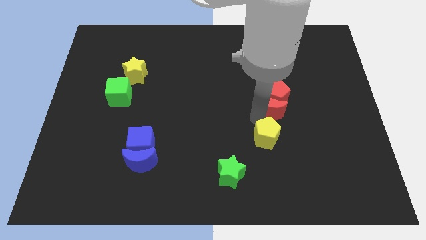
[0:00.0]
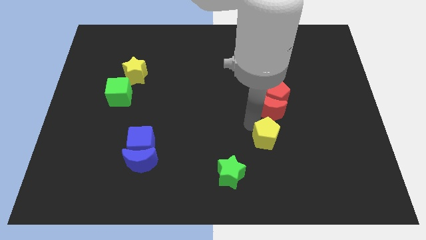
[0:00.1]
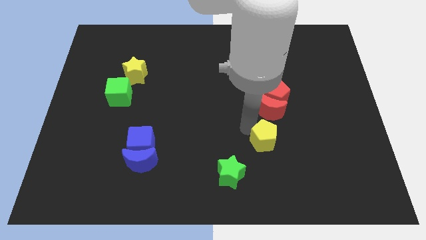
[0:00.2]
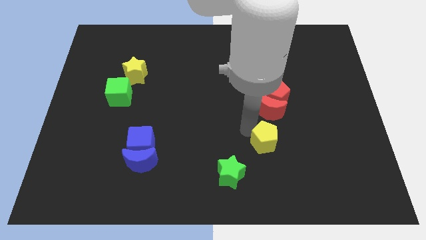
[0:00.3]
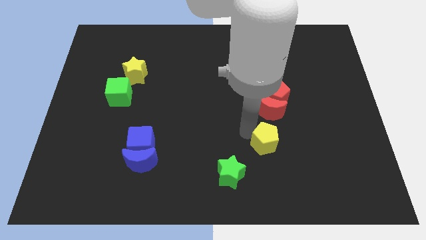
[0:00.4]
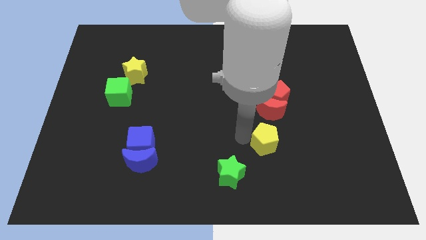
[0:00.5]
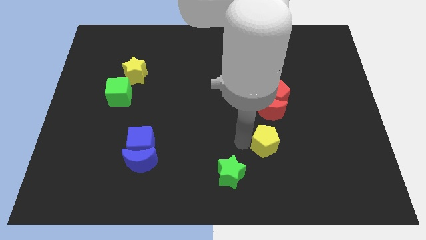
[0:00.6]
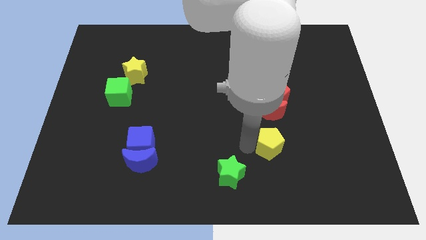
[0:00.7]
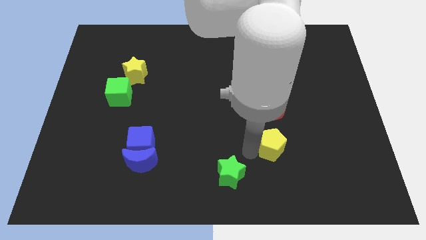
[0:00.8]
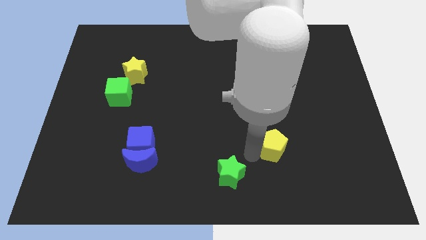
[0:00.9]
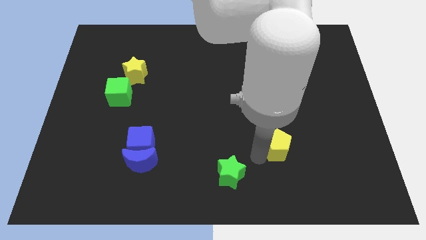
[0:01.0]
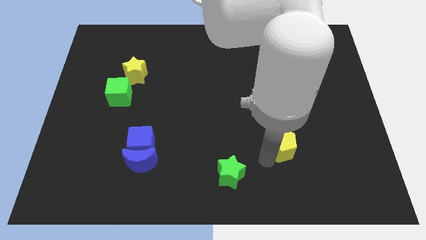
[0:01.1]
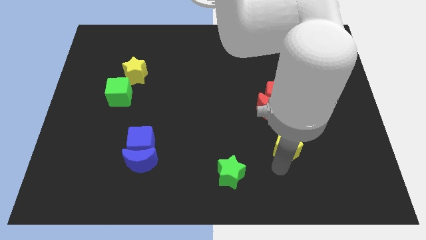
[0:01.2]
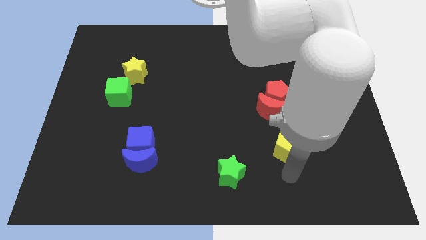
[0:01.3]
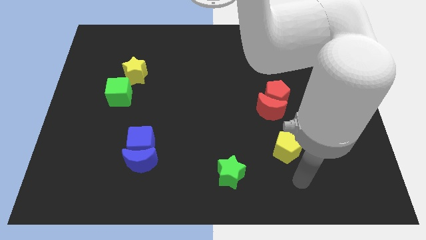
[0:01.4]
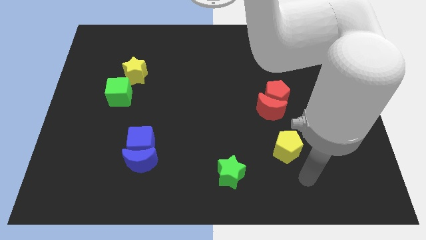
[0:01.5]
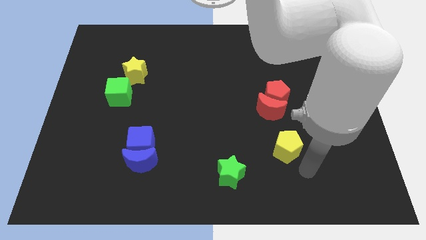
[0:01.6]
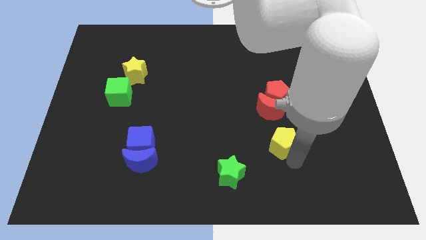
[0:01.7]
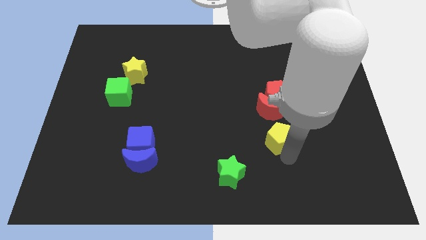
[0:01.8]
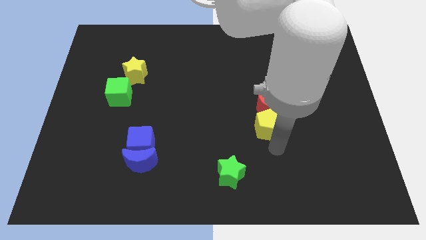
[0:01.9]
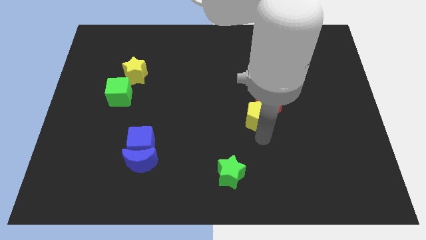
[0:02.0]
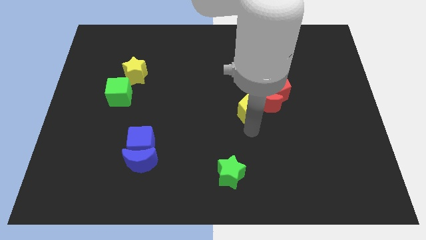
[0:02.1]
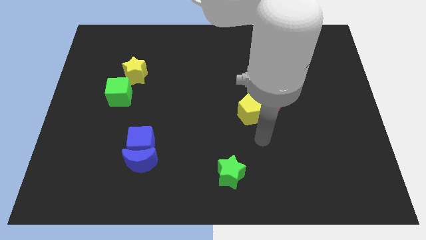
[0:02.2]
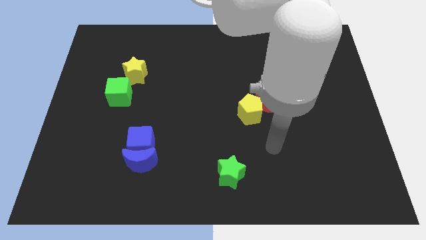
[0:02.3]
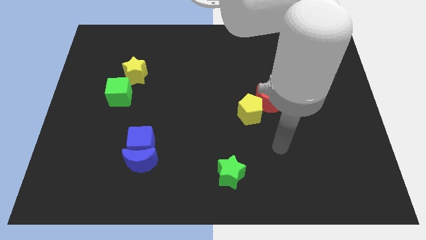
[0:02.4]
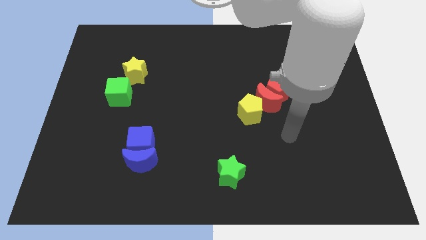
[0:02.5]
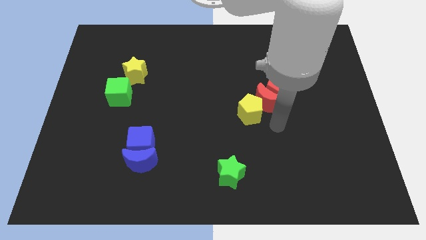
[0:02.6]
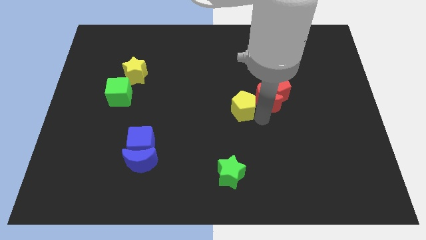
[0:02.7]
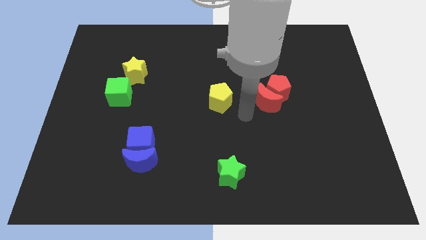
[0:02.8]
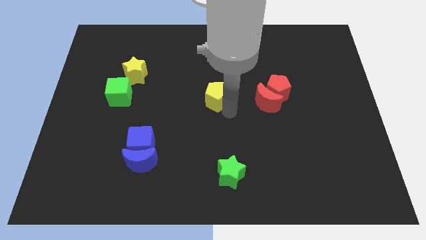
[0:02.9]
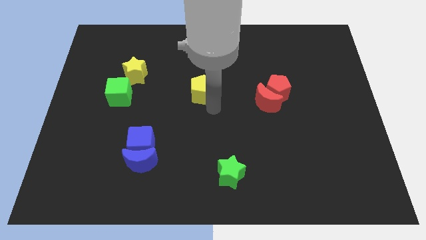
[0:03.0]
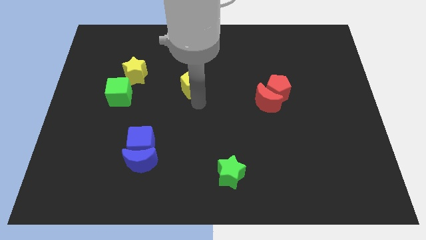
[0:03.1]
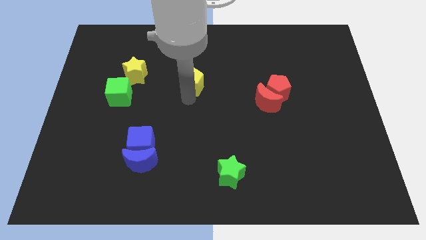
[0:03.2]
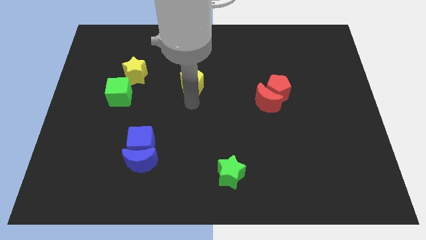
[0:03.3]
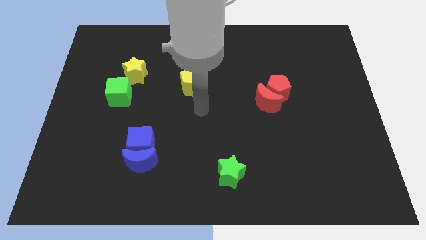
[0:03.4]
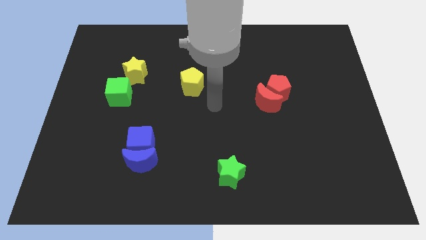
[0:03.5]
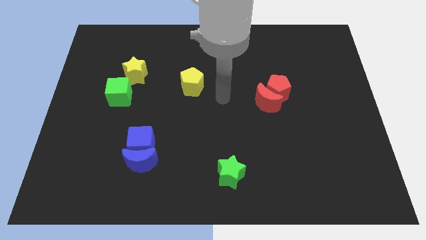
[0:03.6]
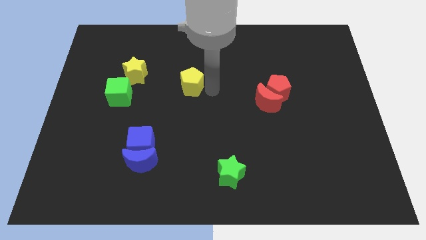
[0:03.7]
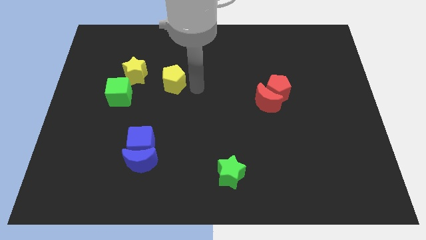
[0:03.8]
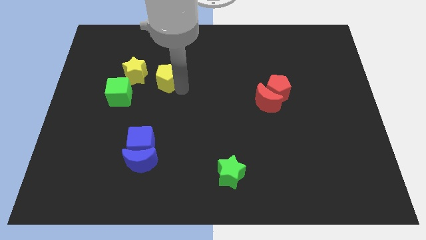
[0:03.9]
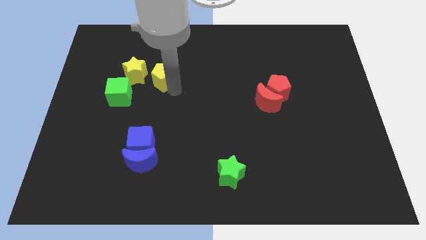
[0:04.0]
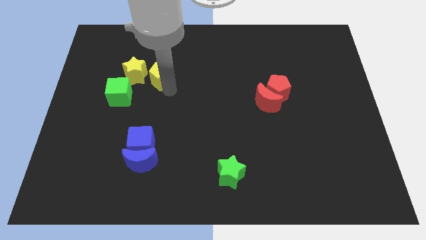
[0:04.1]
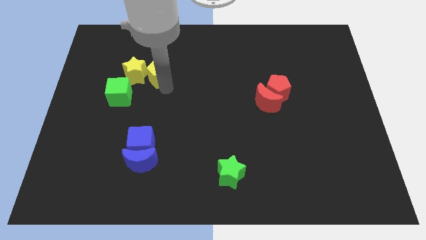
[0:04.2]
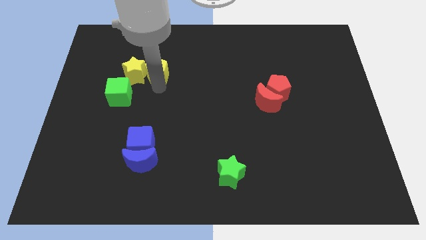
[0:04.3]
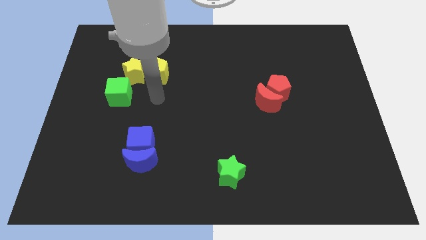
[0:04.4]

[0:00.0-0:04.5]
push the yellow pentagon towards the right side of the yellow star

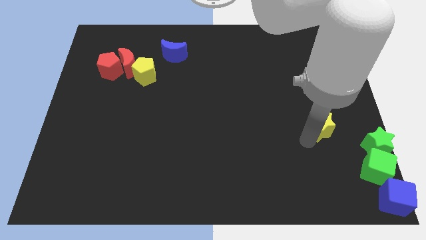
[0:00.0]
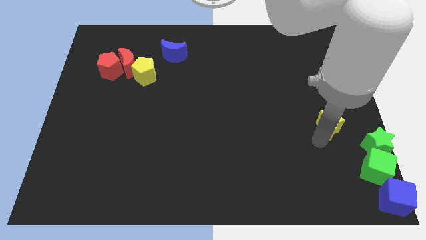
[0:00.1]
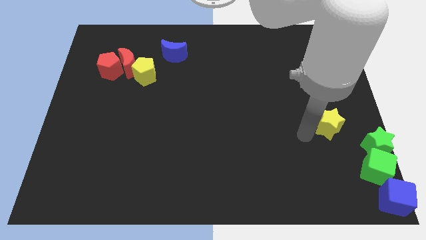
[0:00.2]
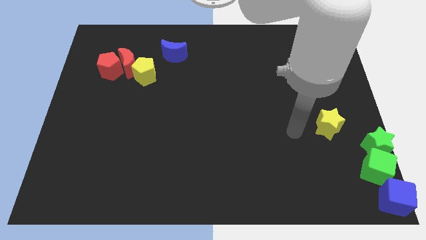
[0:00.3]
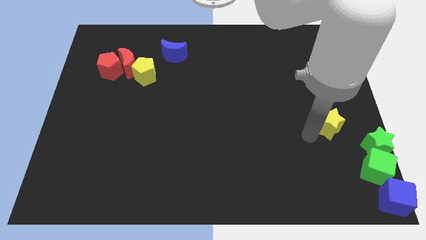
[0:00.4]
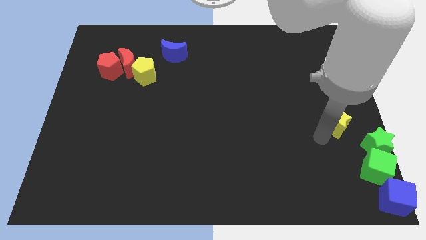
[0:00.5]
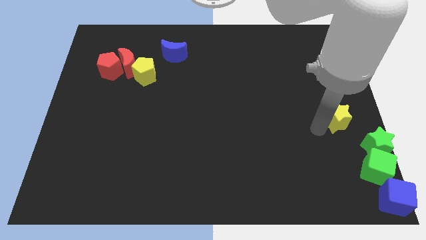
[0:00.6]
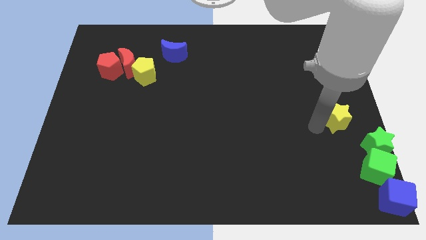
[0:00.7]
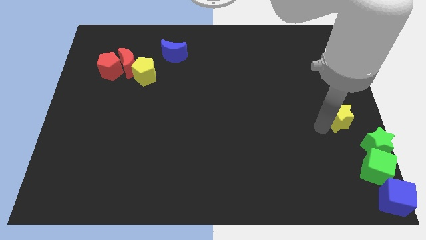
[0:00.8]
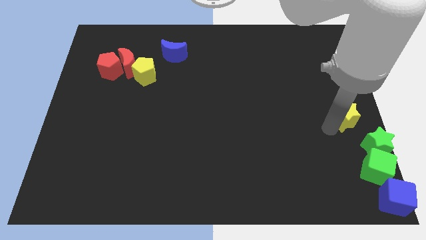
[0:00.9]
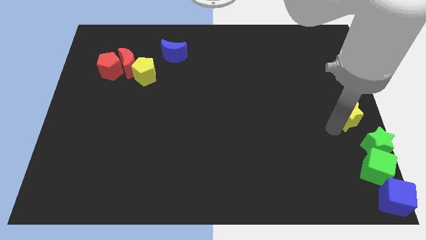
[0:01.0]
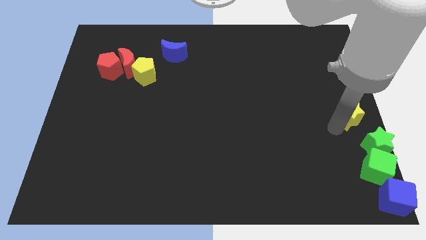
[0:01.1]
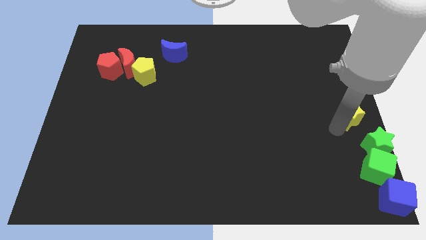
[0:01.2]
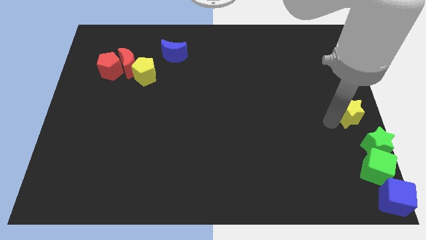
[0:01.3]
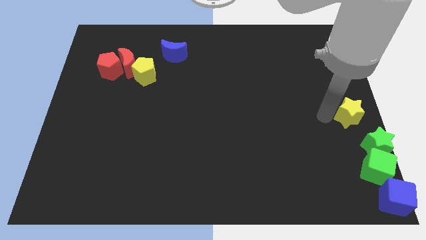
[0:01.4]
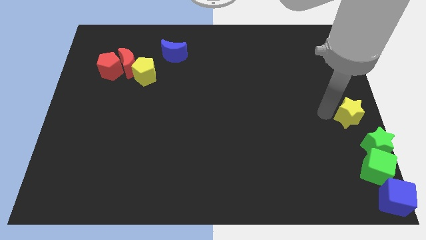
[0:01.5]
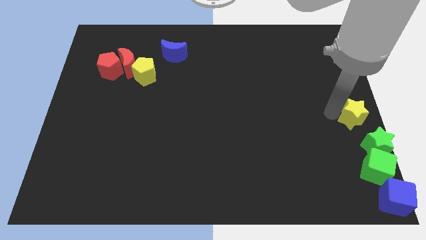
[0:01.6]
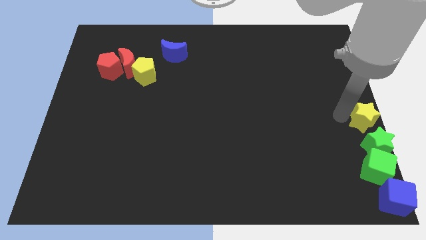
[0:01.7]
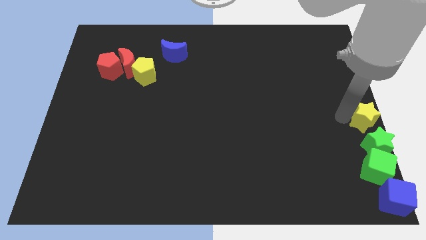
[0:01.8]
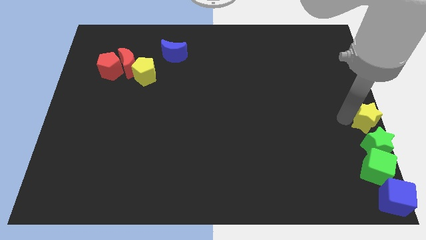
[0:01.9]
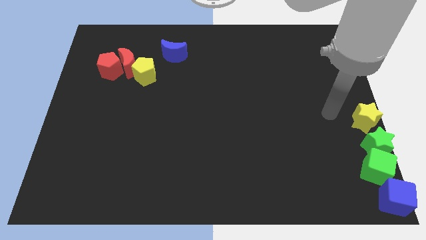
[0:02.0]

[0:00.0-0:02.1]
place the yellow star to the top of the green star

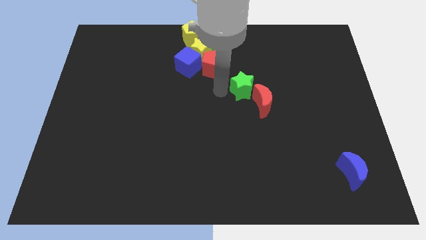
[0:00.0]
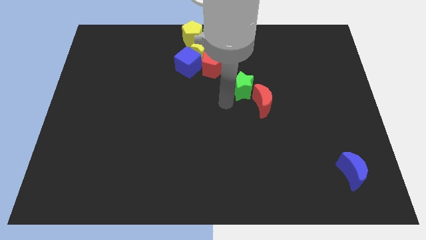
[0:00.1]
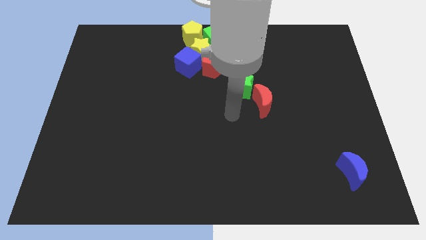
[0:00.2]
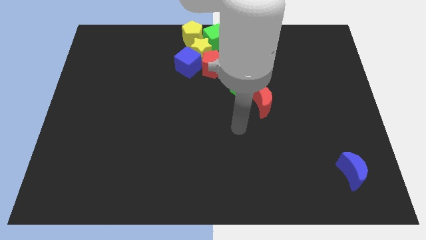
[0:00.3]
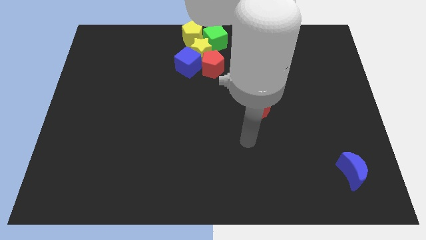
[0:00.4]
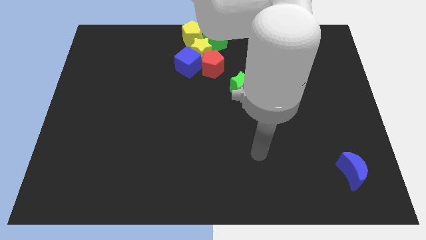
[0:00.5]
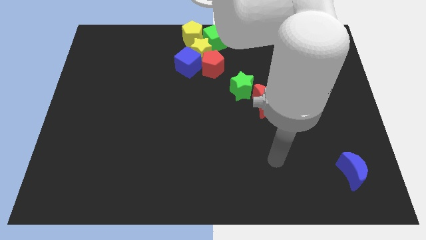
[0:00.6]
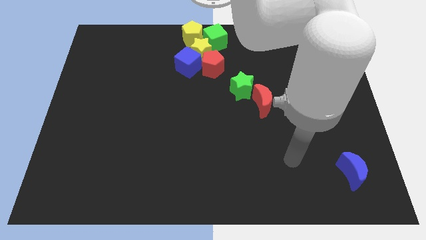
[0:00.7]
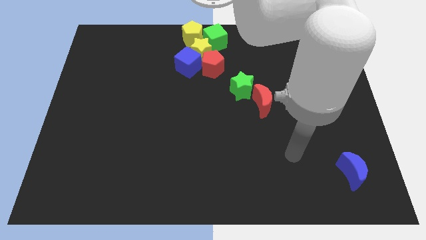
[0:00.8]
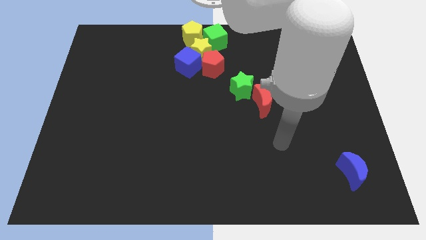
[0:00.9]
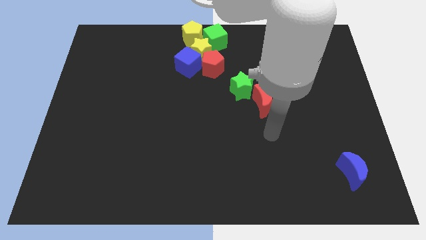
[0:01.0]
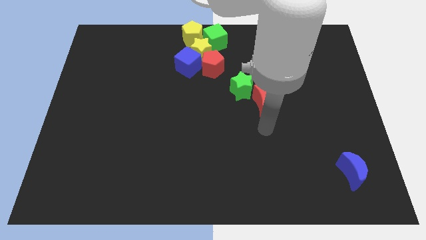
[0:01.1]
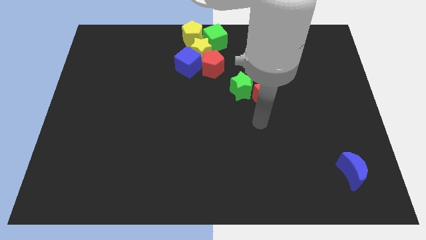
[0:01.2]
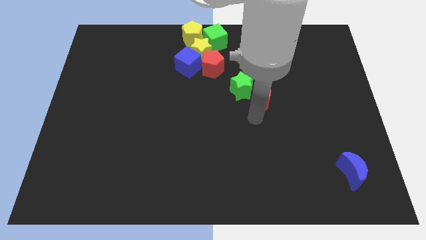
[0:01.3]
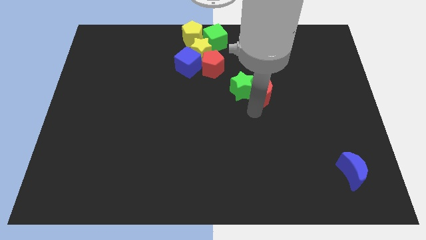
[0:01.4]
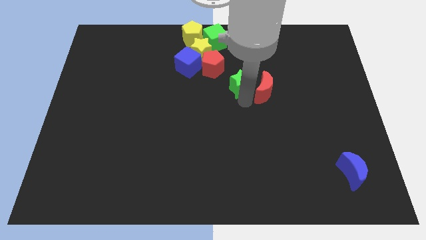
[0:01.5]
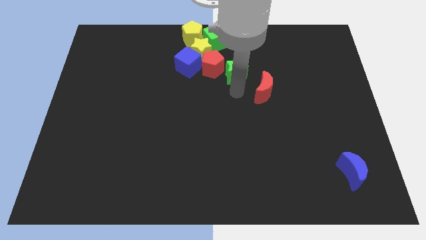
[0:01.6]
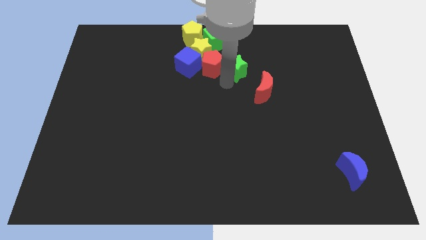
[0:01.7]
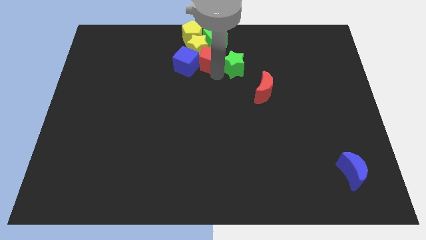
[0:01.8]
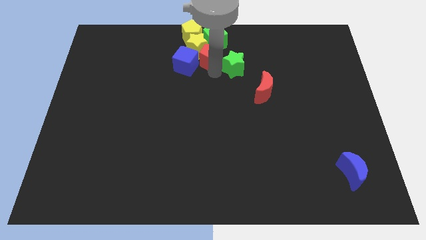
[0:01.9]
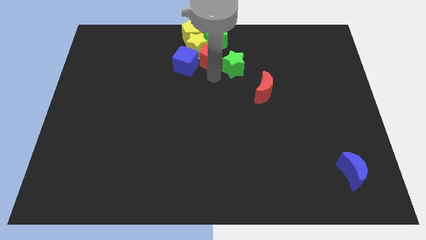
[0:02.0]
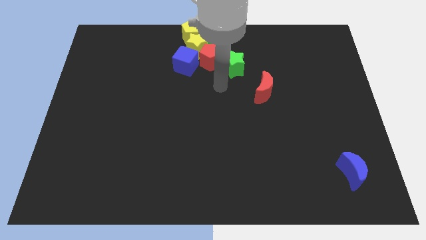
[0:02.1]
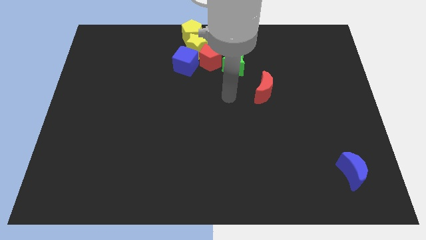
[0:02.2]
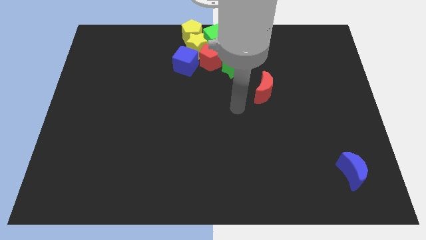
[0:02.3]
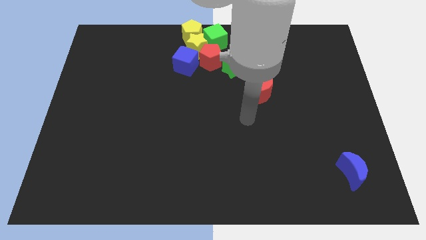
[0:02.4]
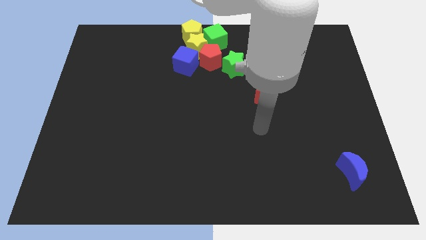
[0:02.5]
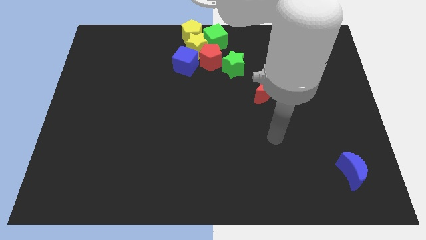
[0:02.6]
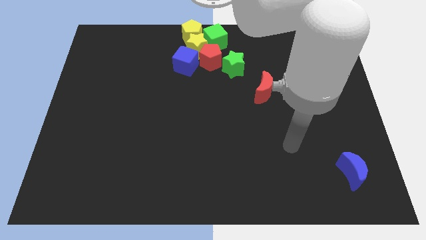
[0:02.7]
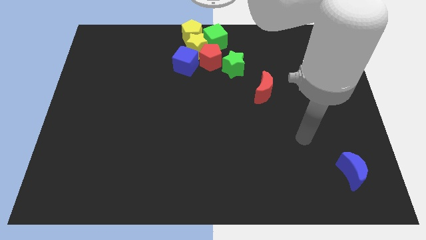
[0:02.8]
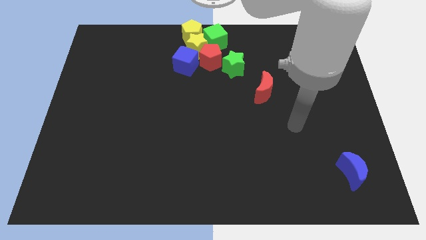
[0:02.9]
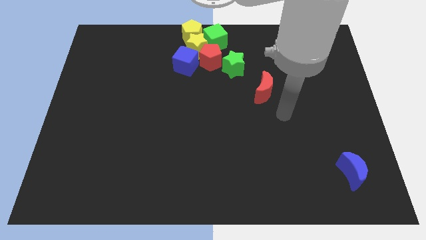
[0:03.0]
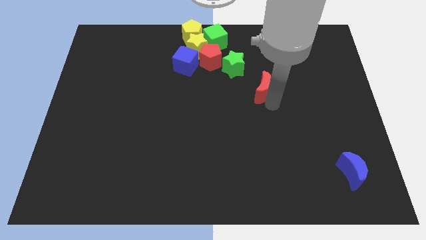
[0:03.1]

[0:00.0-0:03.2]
place green star near red pentagon
